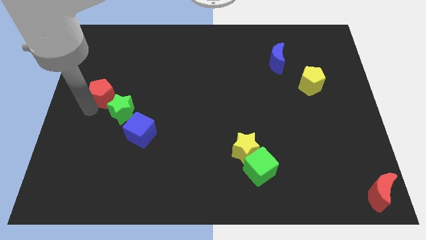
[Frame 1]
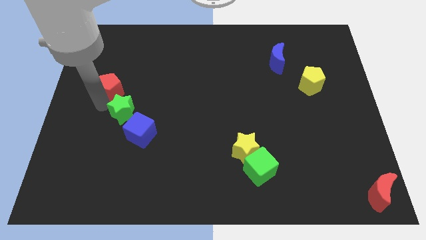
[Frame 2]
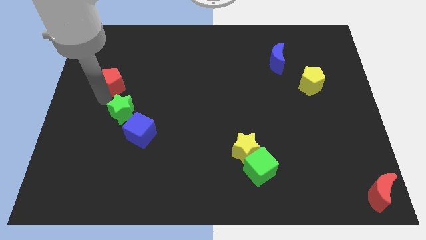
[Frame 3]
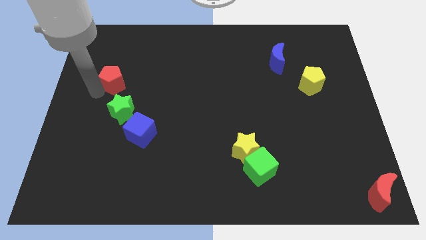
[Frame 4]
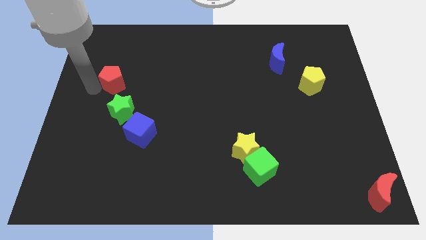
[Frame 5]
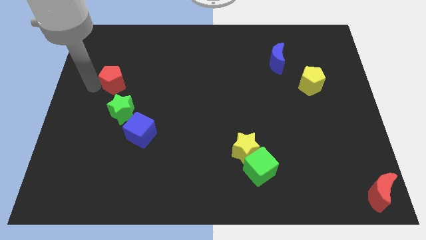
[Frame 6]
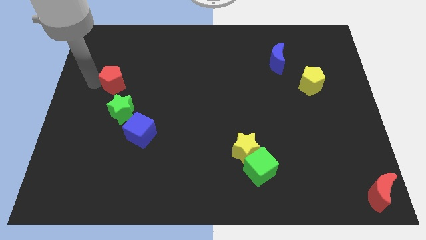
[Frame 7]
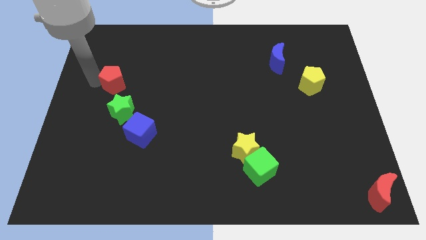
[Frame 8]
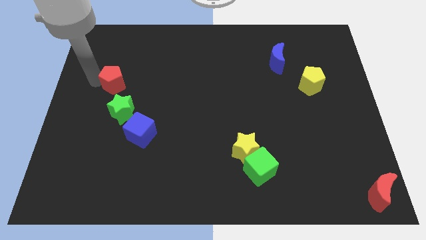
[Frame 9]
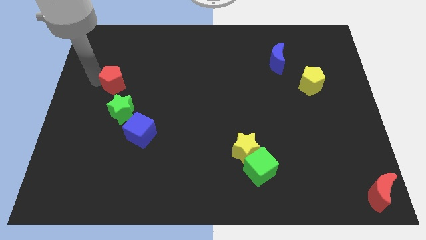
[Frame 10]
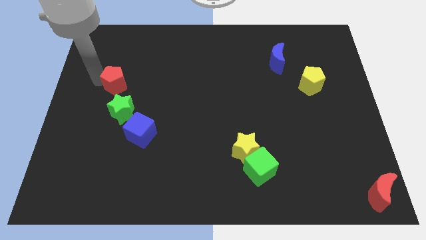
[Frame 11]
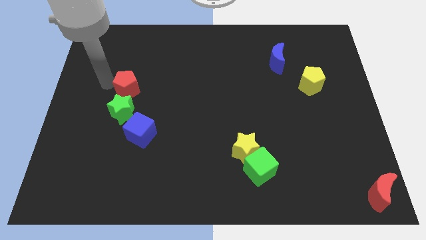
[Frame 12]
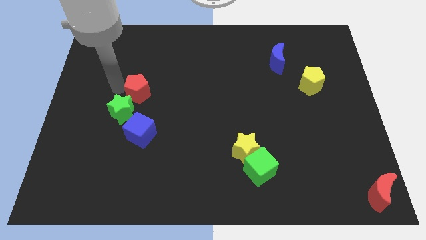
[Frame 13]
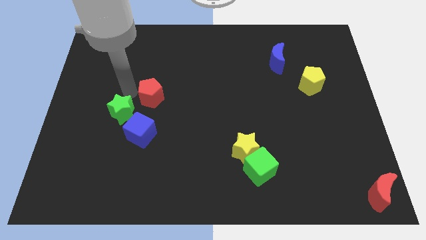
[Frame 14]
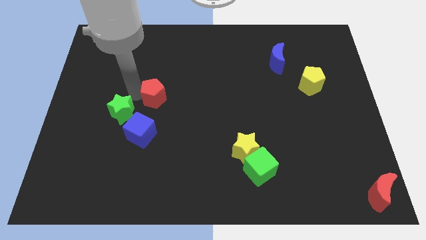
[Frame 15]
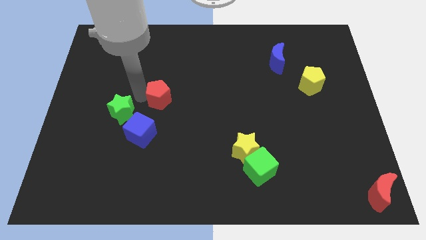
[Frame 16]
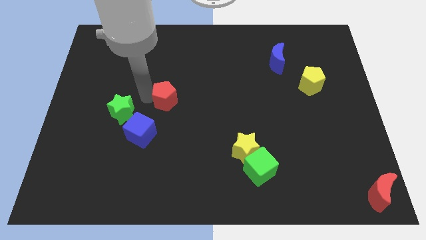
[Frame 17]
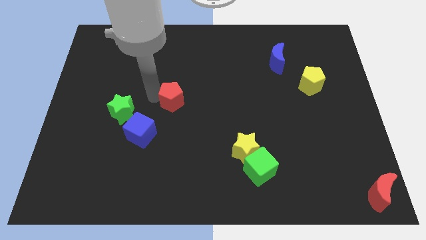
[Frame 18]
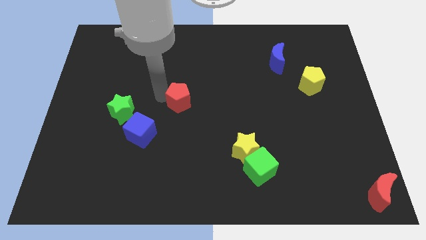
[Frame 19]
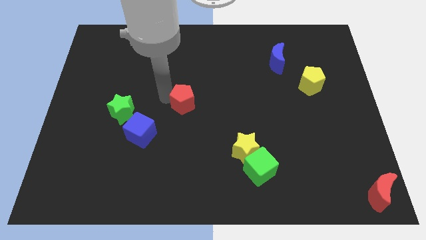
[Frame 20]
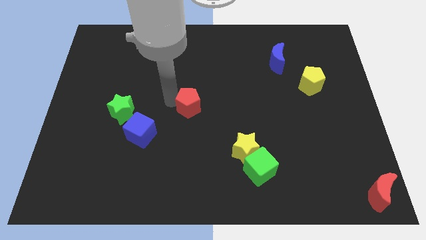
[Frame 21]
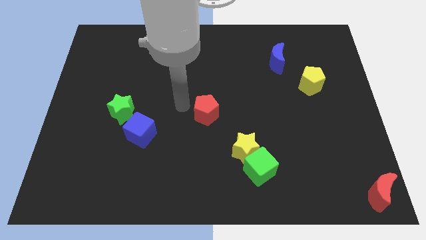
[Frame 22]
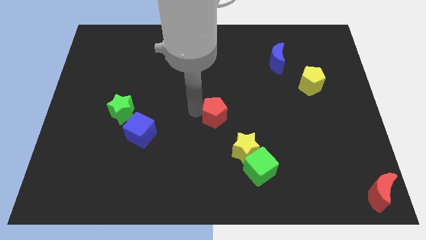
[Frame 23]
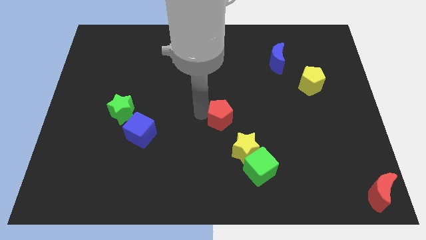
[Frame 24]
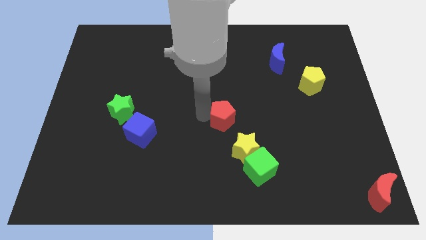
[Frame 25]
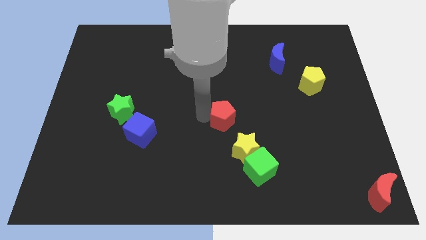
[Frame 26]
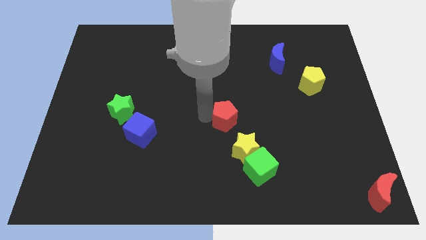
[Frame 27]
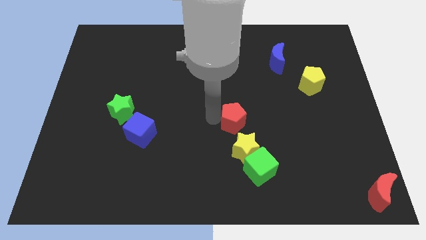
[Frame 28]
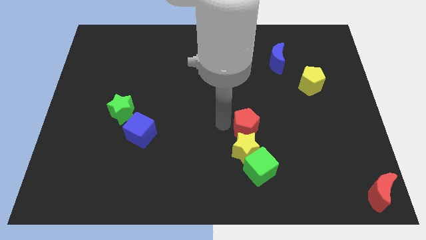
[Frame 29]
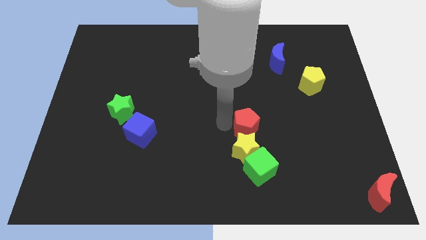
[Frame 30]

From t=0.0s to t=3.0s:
push red pentagon above yellow star

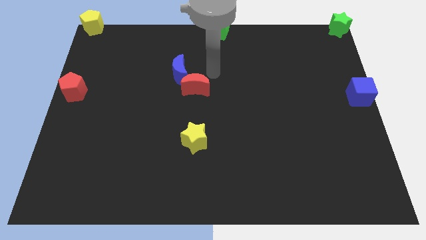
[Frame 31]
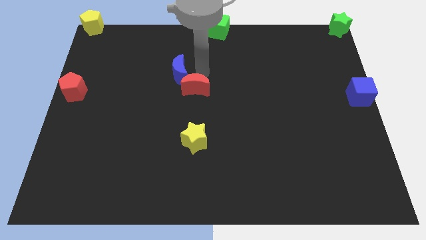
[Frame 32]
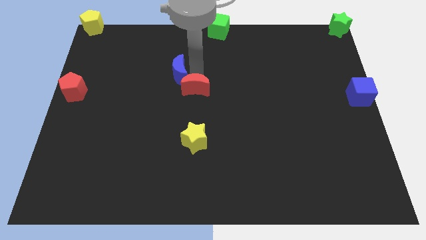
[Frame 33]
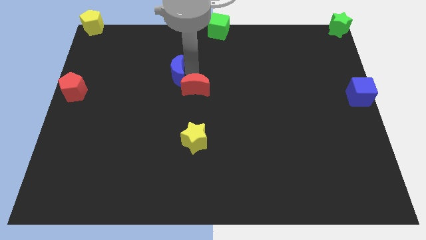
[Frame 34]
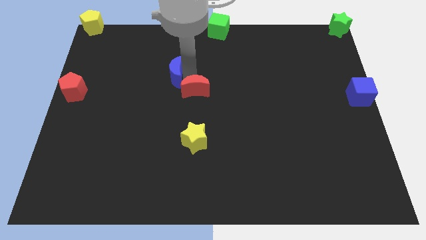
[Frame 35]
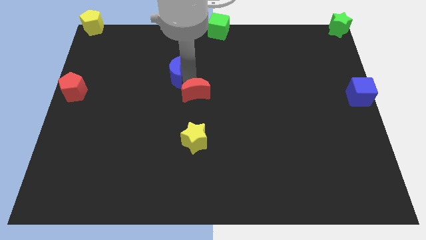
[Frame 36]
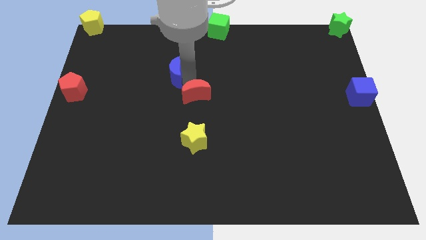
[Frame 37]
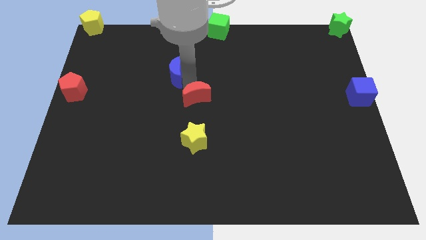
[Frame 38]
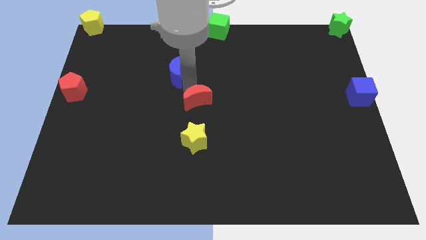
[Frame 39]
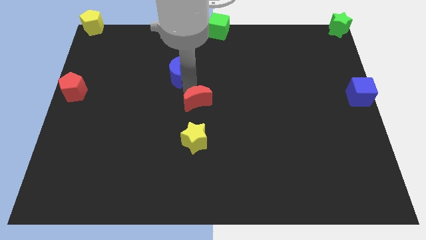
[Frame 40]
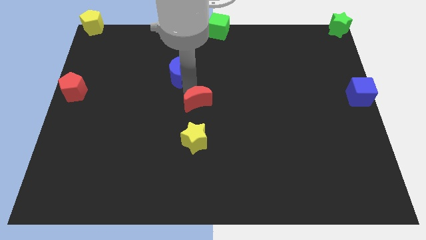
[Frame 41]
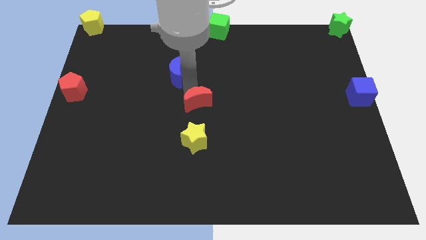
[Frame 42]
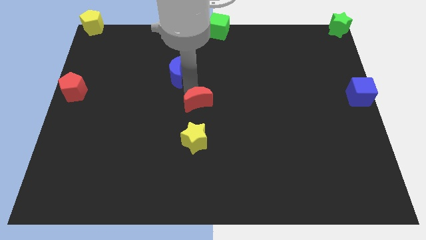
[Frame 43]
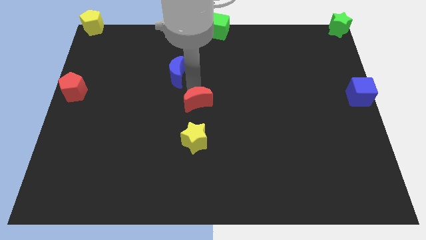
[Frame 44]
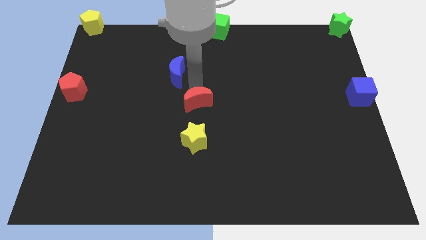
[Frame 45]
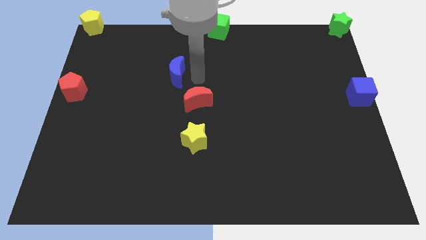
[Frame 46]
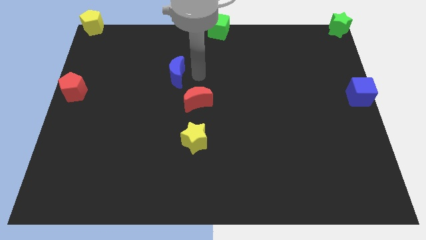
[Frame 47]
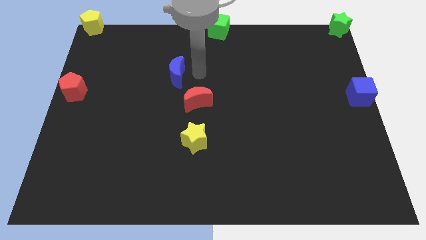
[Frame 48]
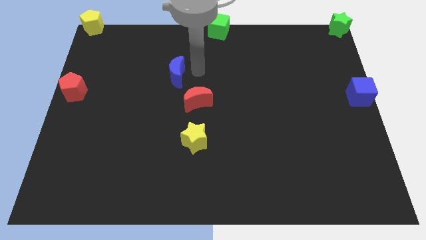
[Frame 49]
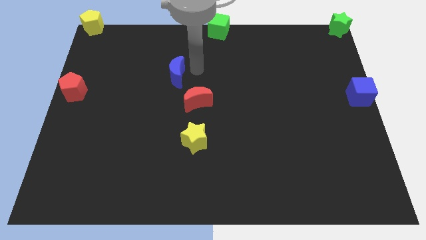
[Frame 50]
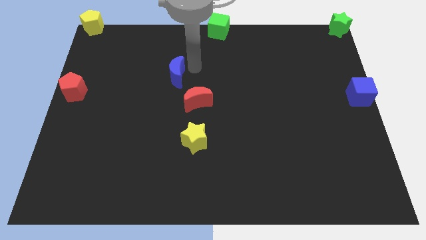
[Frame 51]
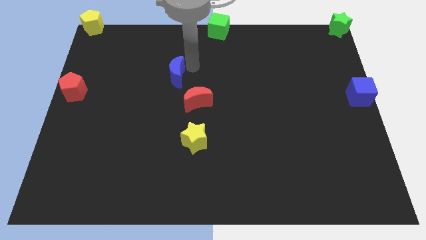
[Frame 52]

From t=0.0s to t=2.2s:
move the red moon towards yellow star

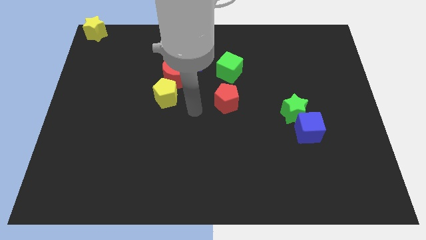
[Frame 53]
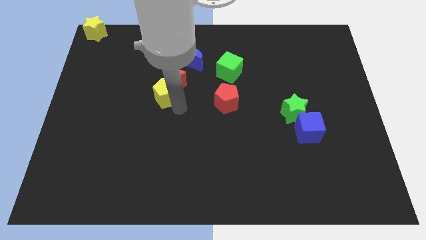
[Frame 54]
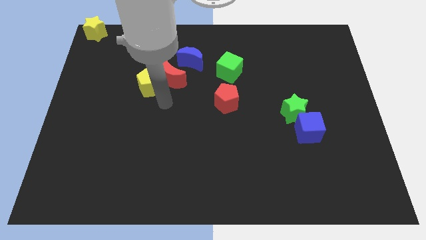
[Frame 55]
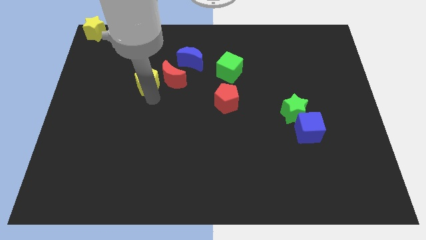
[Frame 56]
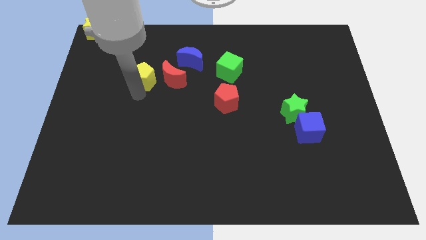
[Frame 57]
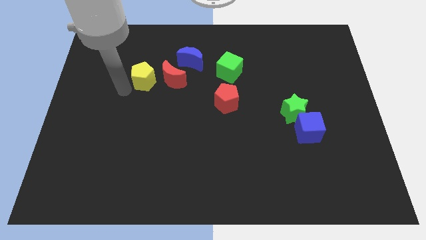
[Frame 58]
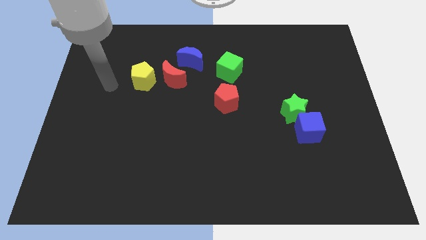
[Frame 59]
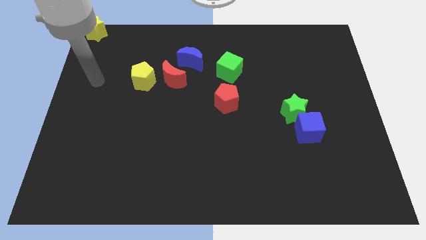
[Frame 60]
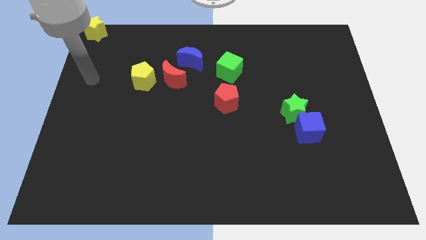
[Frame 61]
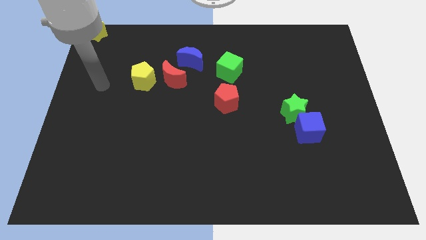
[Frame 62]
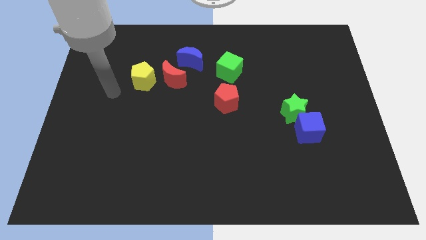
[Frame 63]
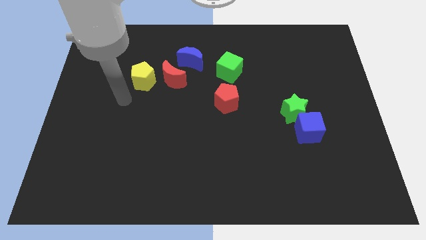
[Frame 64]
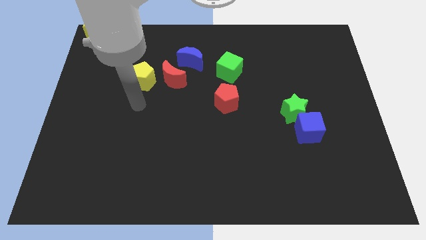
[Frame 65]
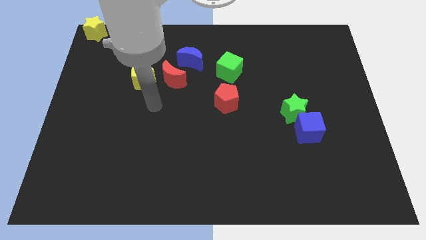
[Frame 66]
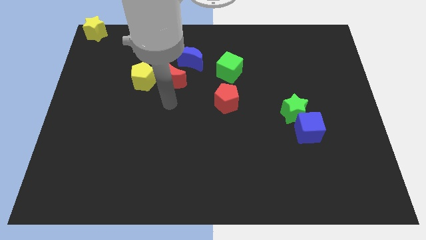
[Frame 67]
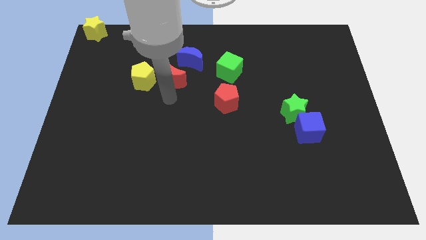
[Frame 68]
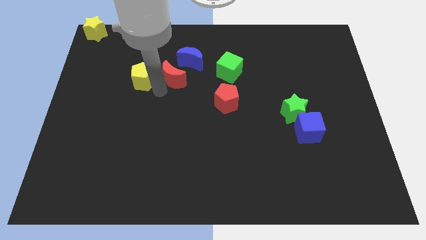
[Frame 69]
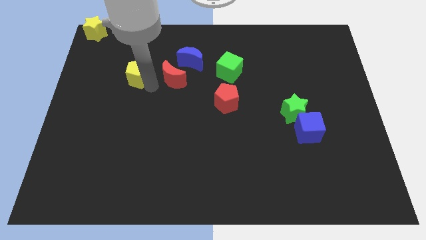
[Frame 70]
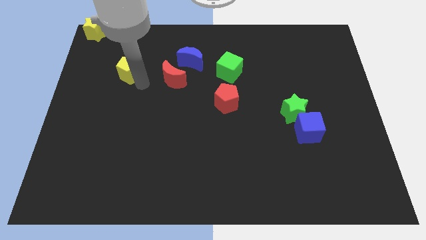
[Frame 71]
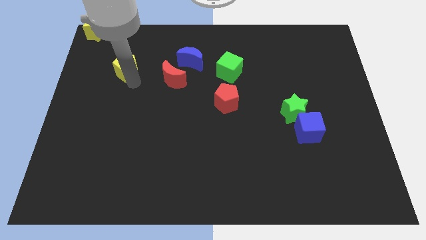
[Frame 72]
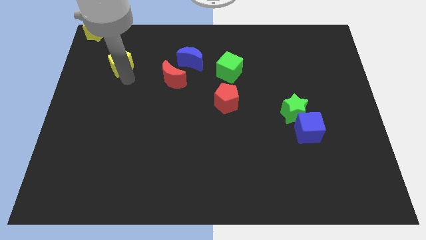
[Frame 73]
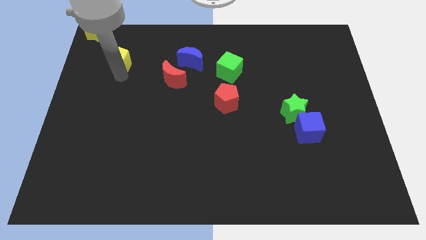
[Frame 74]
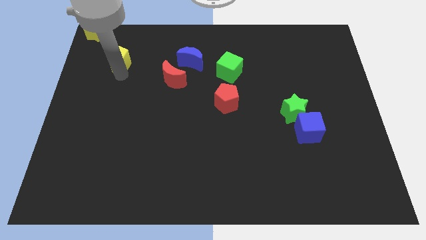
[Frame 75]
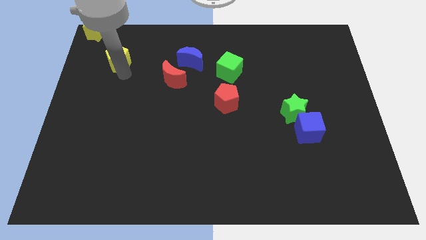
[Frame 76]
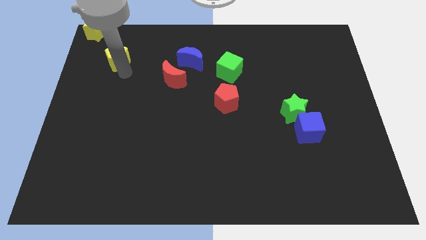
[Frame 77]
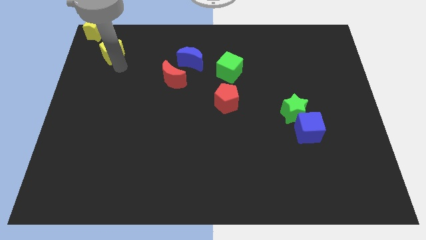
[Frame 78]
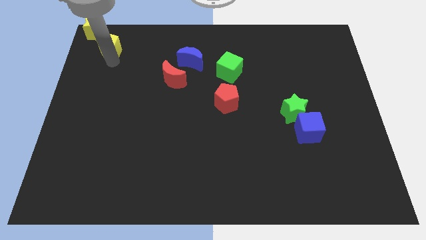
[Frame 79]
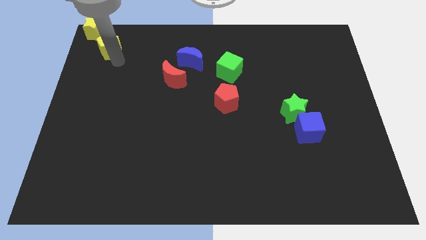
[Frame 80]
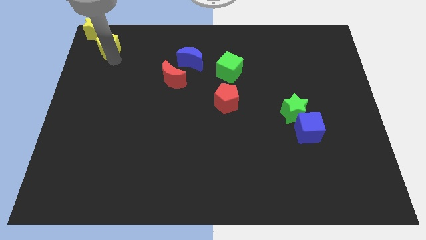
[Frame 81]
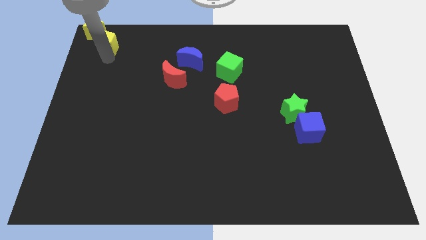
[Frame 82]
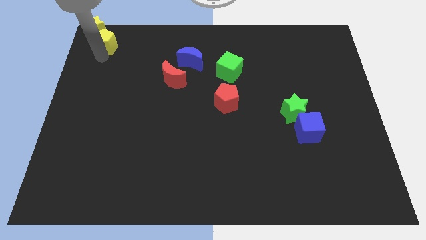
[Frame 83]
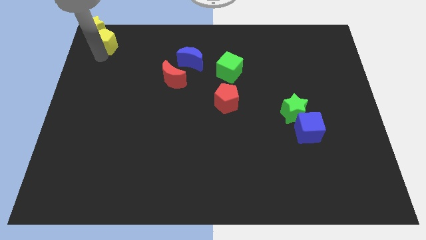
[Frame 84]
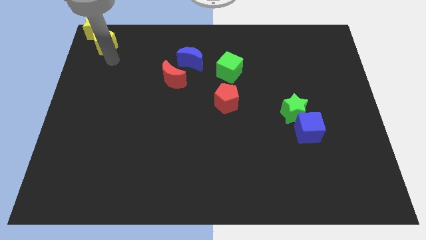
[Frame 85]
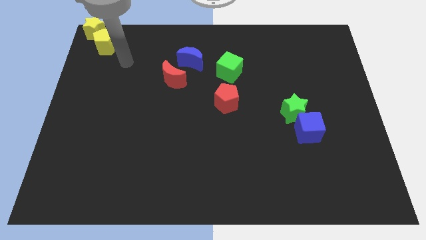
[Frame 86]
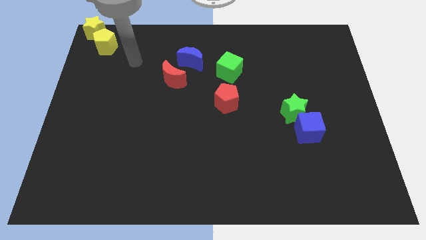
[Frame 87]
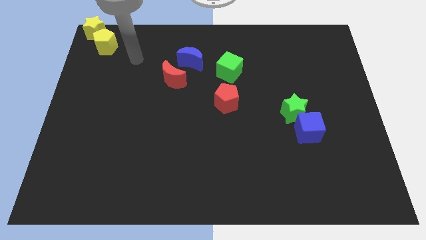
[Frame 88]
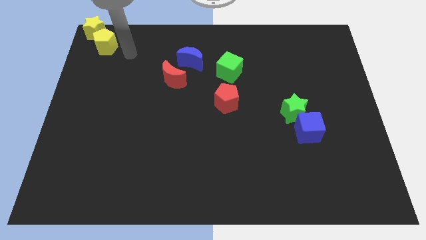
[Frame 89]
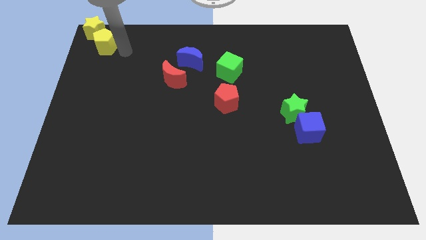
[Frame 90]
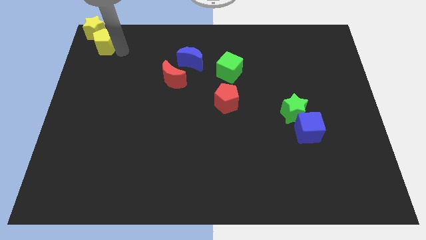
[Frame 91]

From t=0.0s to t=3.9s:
push the yellow pentagon bottom right to the yellow star
